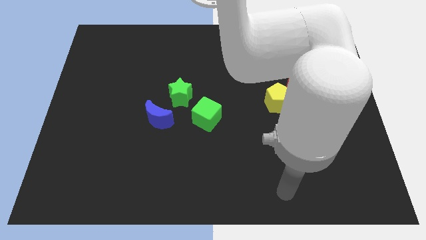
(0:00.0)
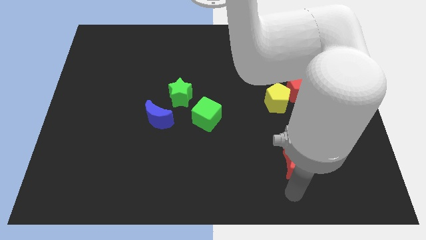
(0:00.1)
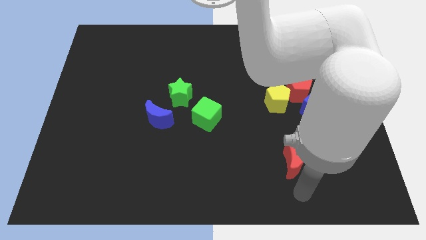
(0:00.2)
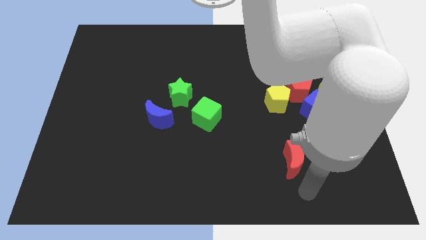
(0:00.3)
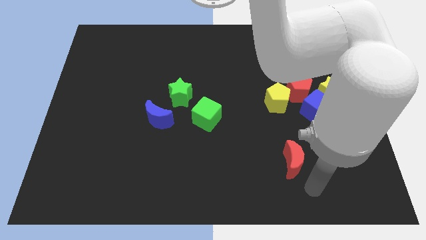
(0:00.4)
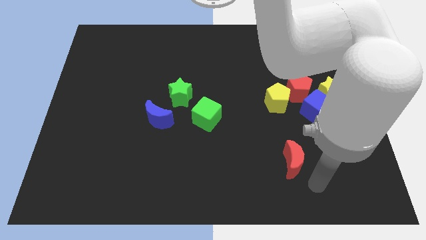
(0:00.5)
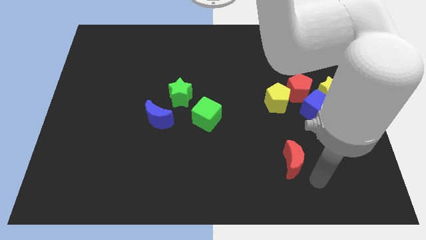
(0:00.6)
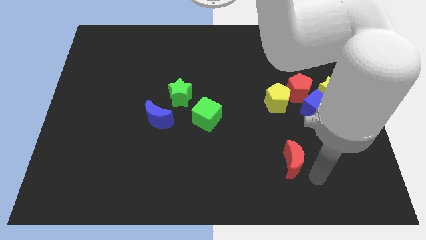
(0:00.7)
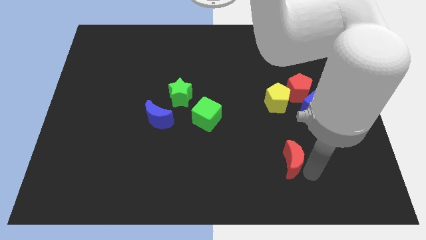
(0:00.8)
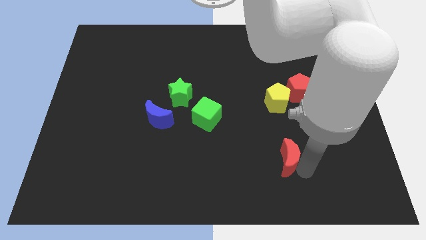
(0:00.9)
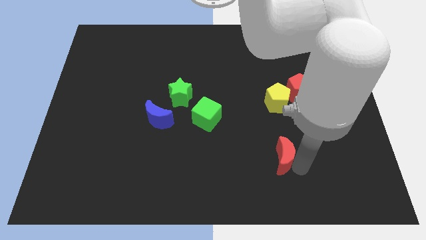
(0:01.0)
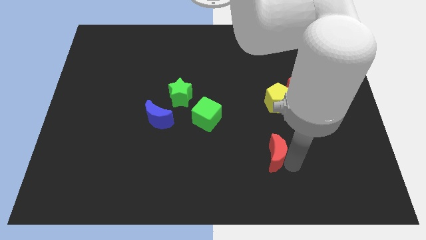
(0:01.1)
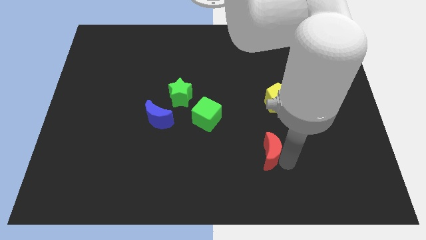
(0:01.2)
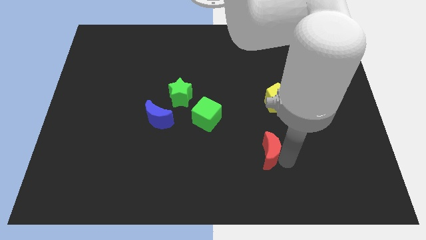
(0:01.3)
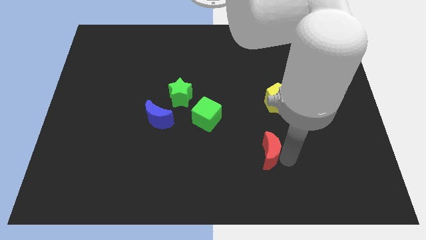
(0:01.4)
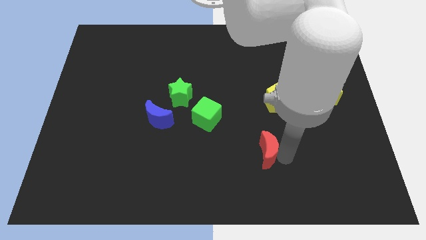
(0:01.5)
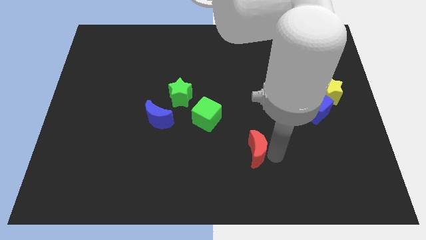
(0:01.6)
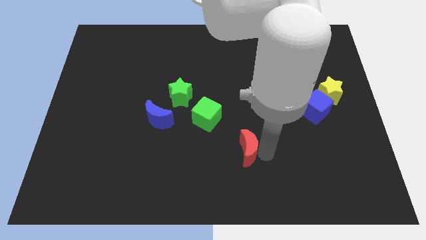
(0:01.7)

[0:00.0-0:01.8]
move the red moon towards the bottom right side of the green cube

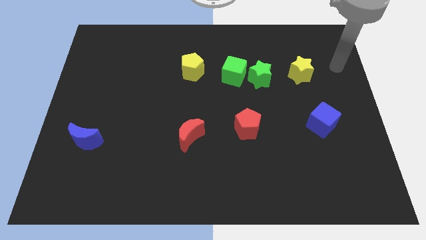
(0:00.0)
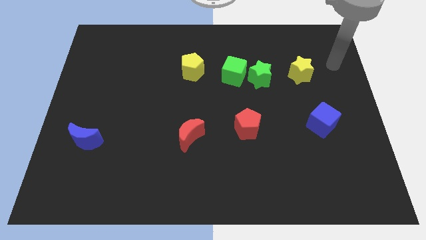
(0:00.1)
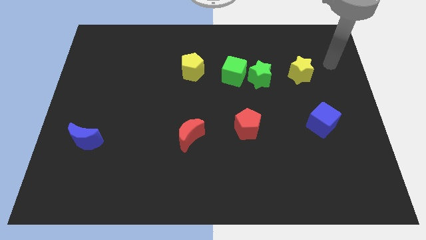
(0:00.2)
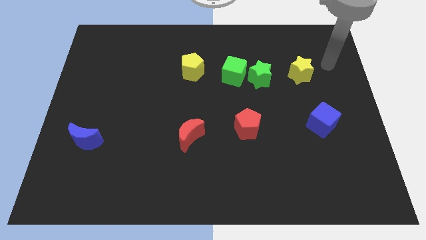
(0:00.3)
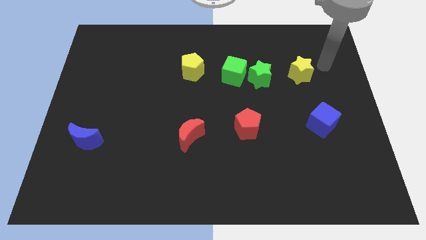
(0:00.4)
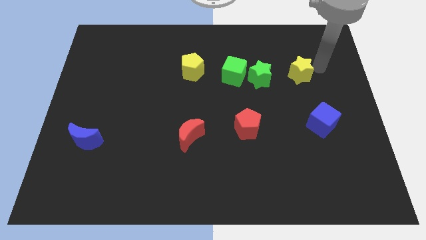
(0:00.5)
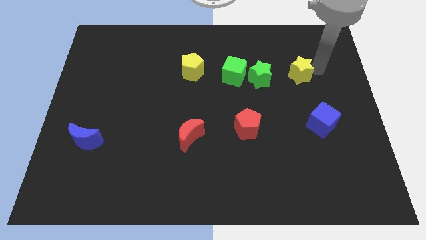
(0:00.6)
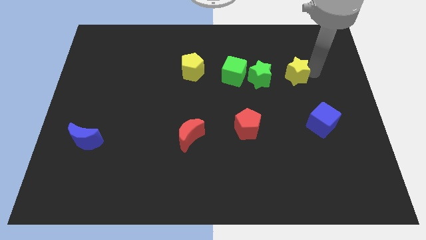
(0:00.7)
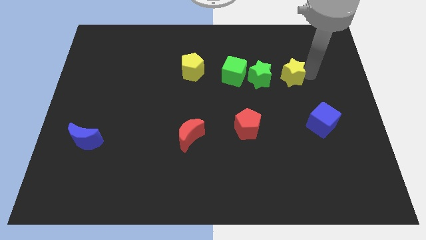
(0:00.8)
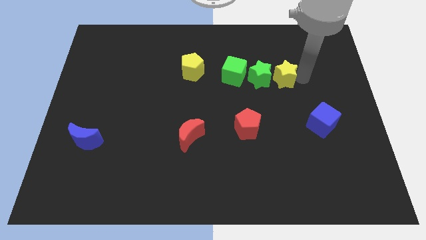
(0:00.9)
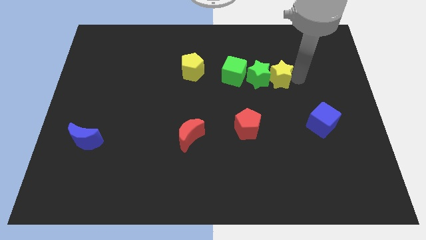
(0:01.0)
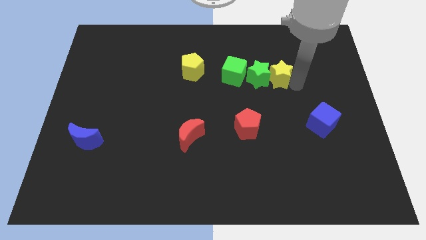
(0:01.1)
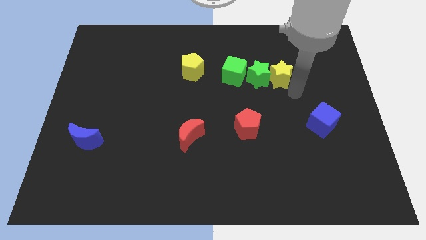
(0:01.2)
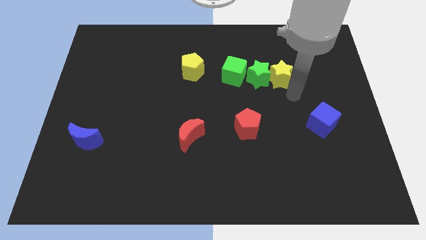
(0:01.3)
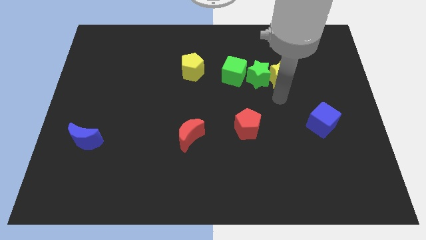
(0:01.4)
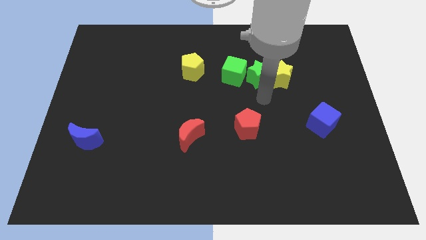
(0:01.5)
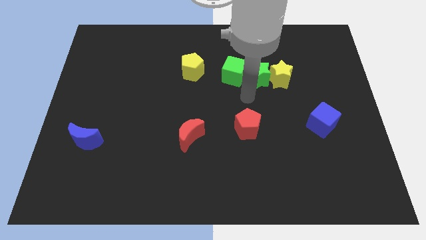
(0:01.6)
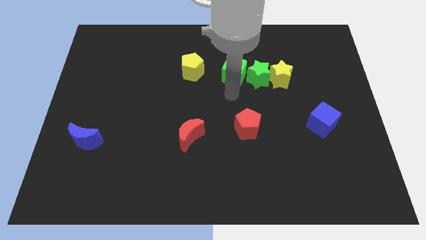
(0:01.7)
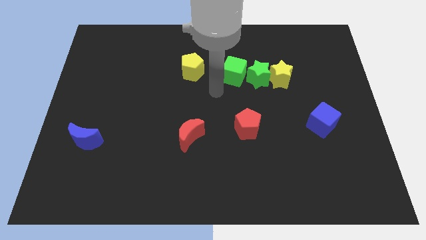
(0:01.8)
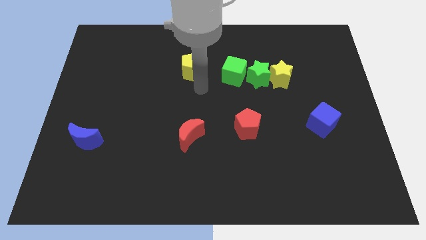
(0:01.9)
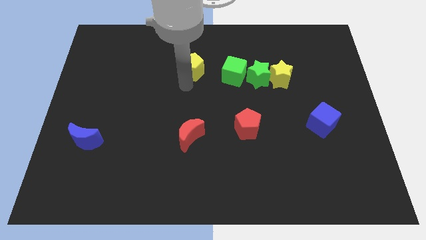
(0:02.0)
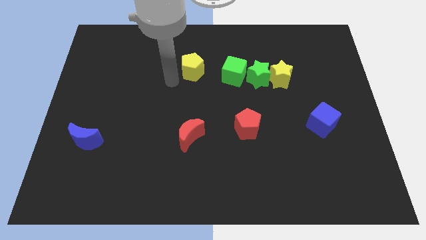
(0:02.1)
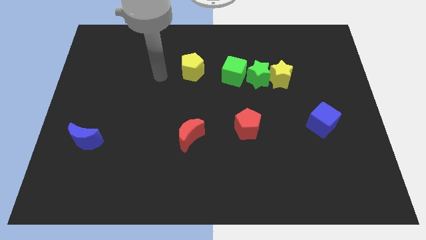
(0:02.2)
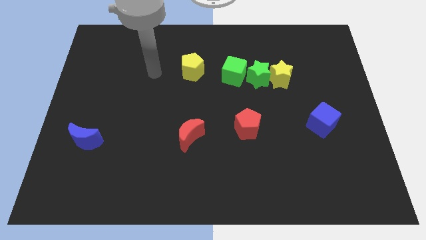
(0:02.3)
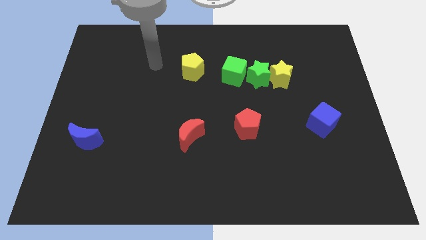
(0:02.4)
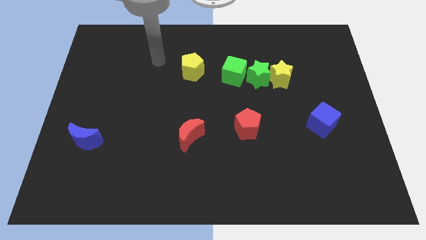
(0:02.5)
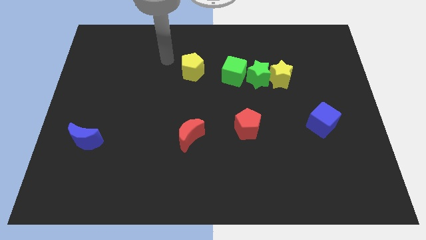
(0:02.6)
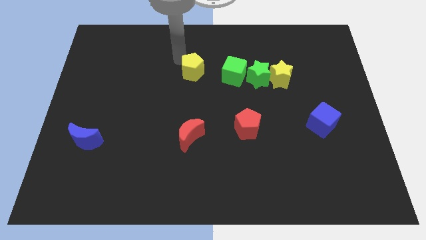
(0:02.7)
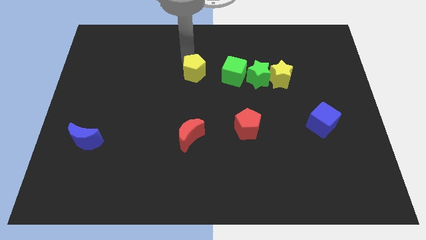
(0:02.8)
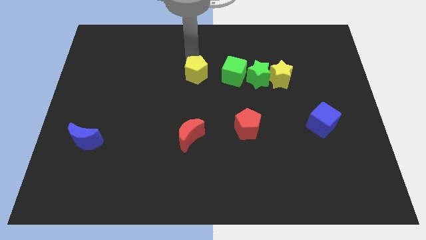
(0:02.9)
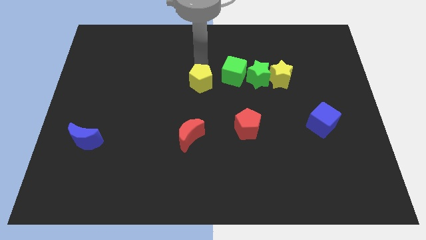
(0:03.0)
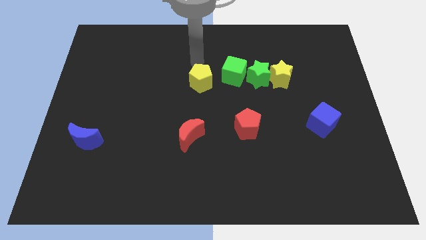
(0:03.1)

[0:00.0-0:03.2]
push the yellow star into the right side of the green star

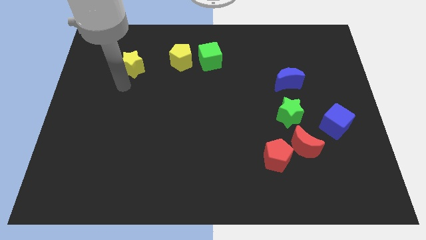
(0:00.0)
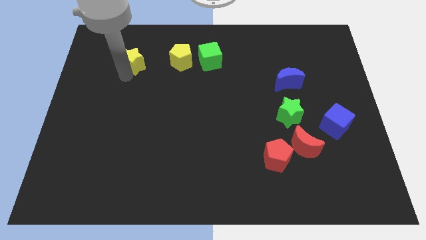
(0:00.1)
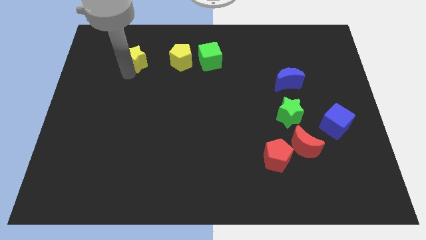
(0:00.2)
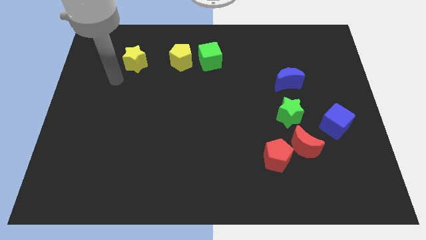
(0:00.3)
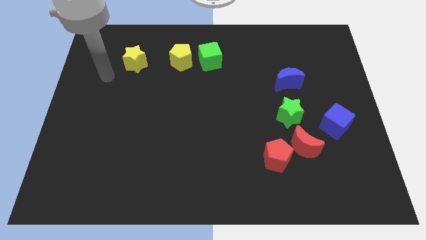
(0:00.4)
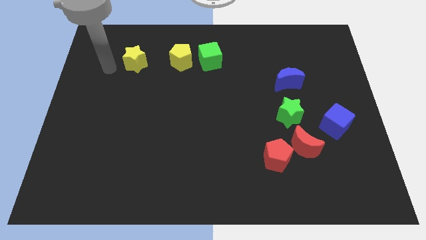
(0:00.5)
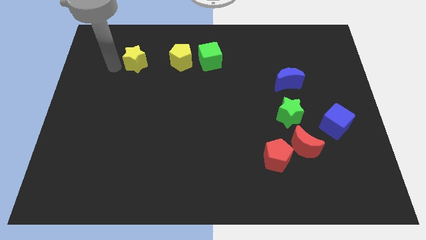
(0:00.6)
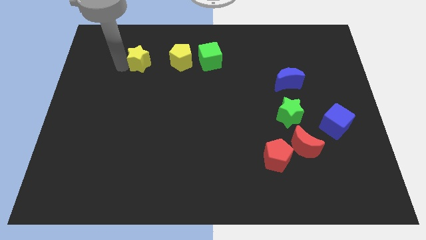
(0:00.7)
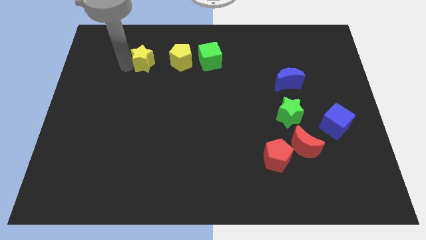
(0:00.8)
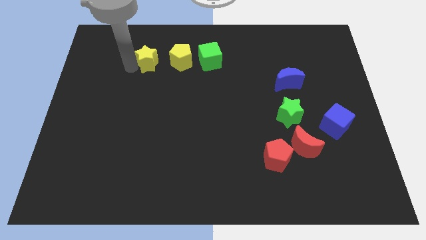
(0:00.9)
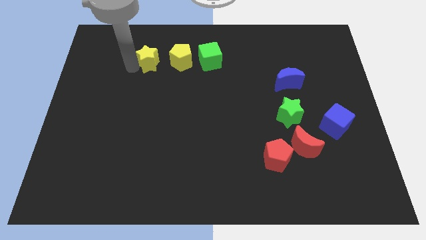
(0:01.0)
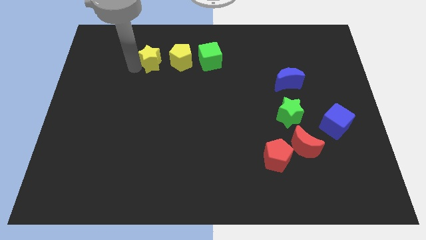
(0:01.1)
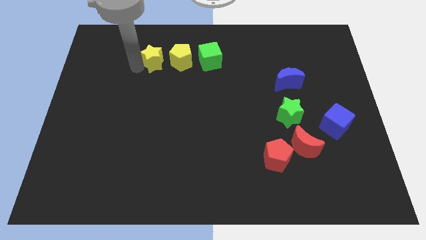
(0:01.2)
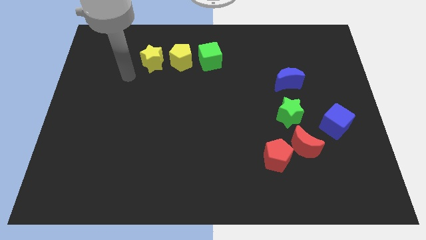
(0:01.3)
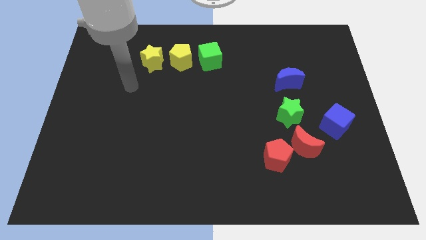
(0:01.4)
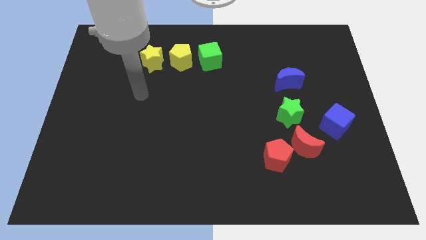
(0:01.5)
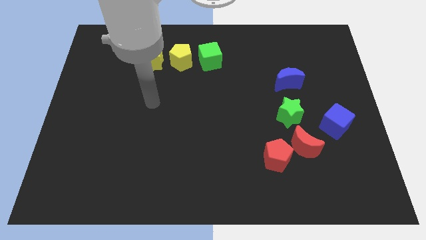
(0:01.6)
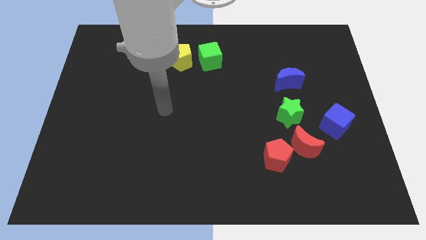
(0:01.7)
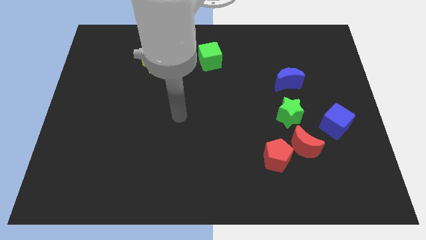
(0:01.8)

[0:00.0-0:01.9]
push the yellow star towards the yellow pentagon

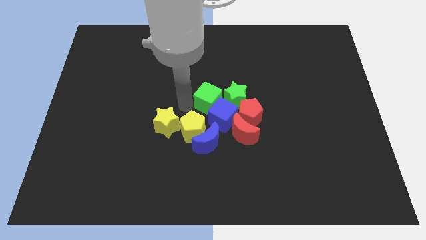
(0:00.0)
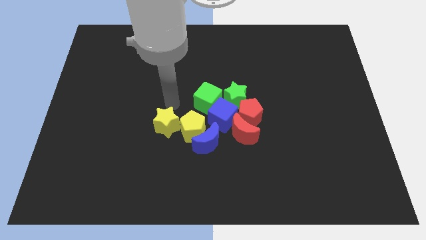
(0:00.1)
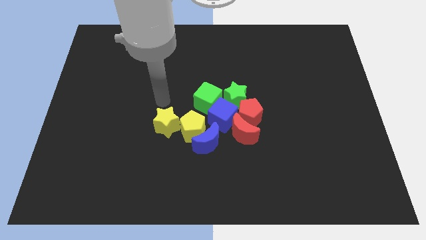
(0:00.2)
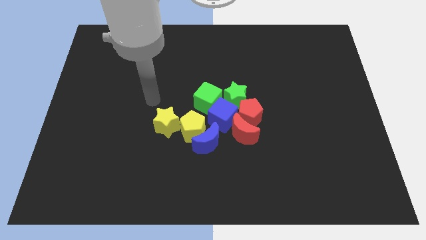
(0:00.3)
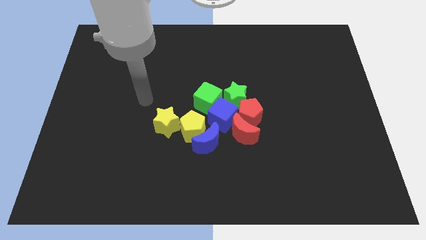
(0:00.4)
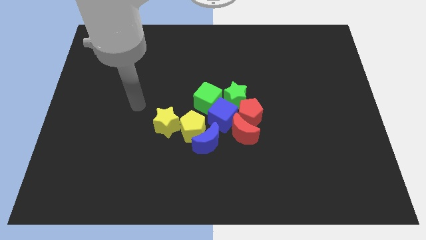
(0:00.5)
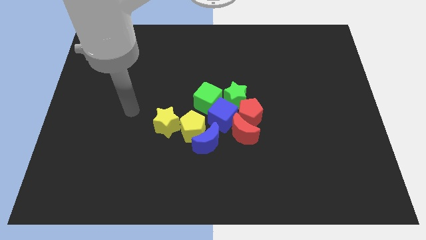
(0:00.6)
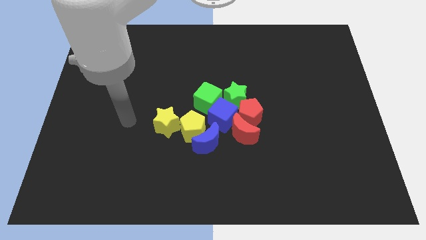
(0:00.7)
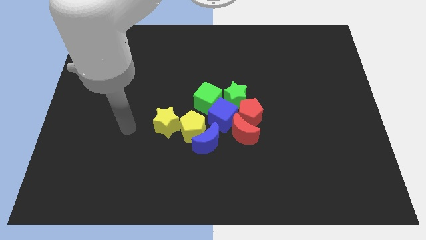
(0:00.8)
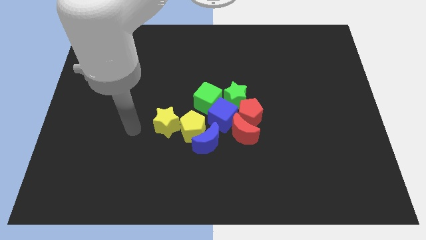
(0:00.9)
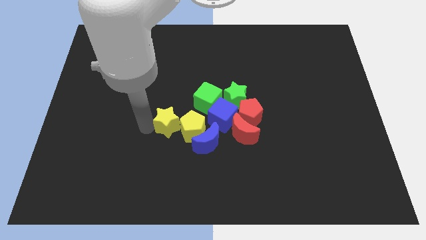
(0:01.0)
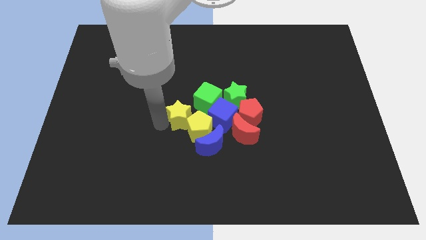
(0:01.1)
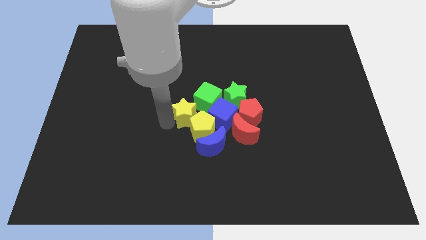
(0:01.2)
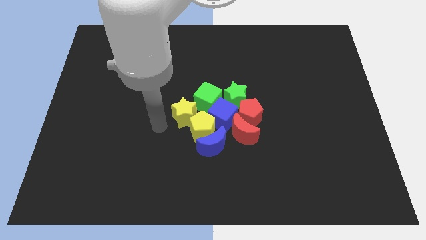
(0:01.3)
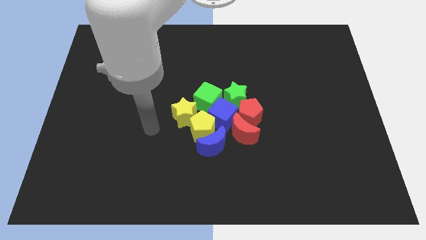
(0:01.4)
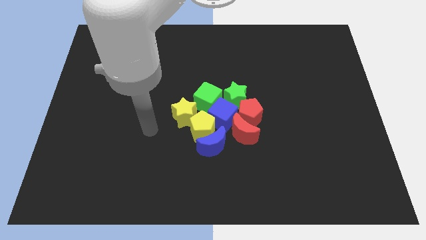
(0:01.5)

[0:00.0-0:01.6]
slide the yellow star slightly towards the green cube

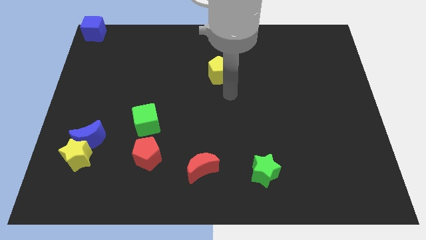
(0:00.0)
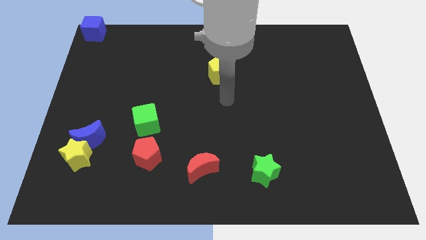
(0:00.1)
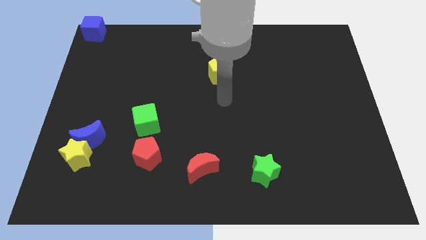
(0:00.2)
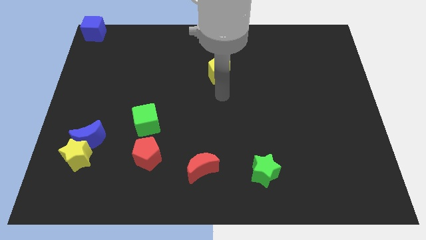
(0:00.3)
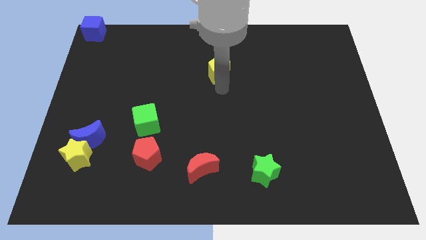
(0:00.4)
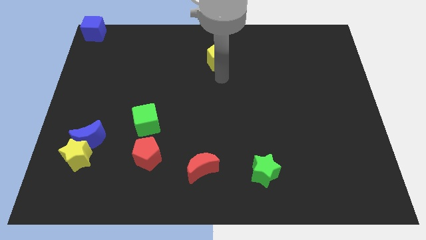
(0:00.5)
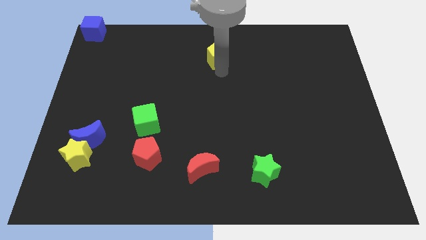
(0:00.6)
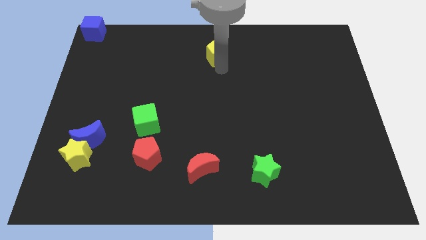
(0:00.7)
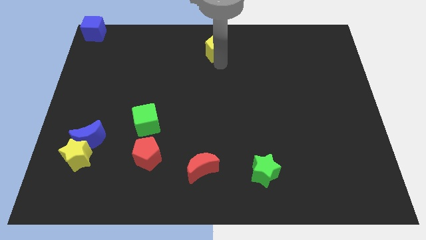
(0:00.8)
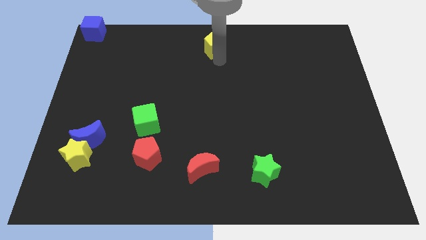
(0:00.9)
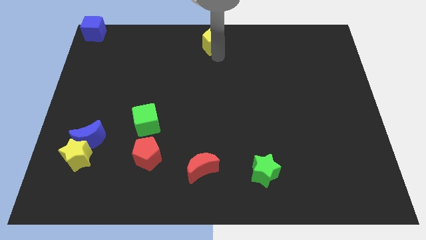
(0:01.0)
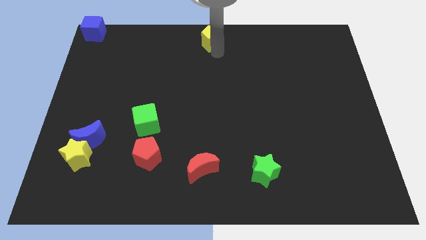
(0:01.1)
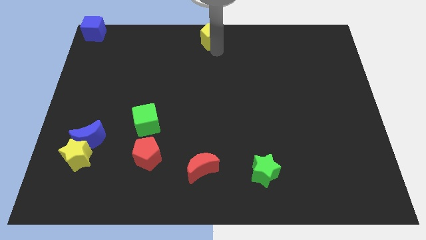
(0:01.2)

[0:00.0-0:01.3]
move yellow pentagon to center top
